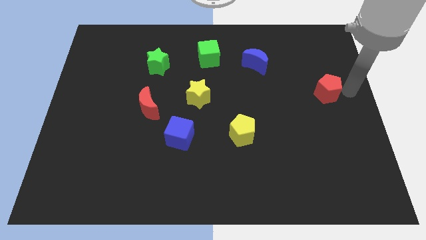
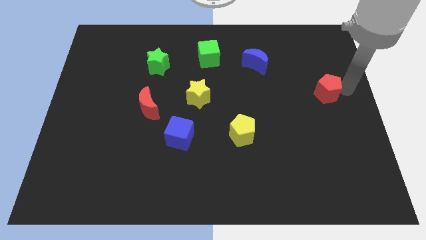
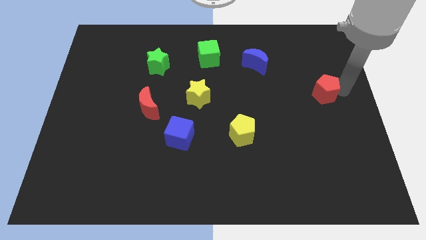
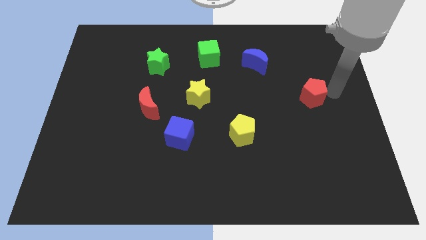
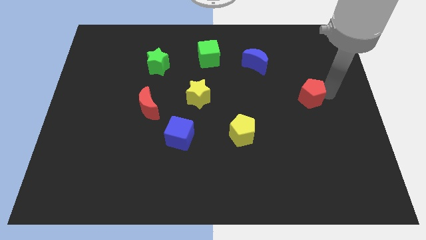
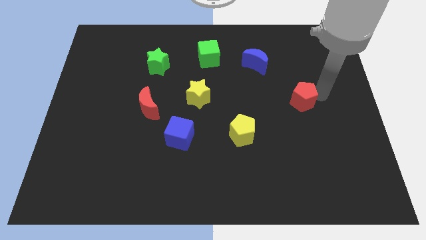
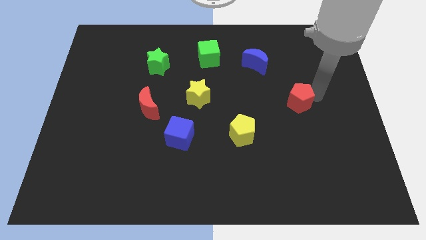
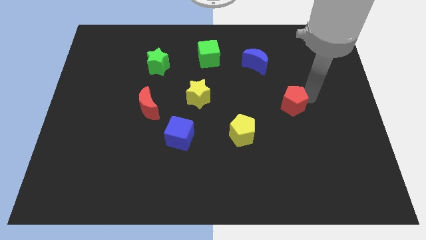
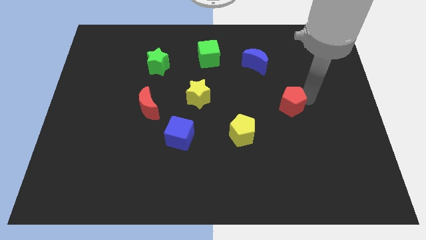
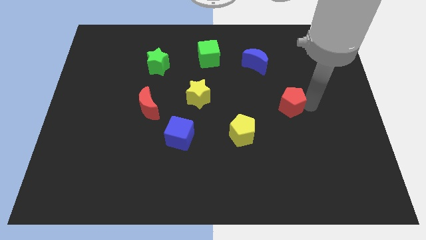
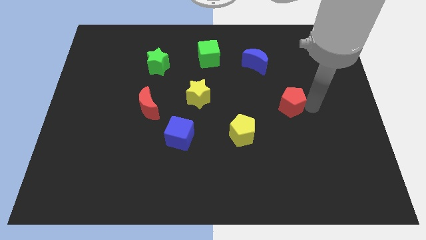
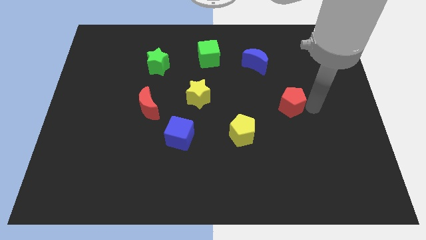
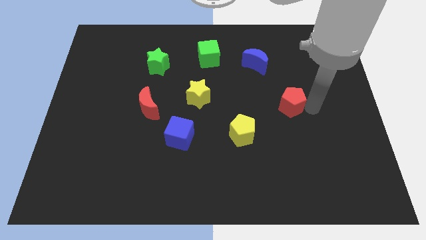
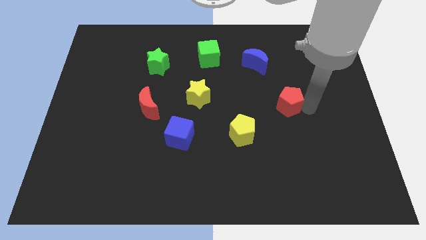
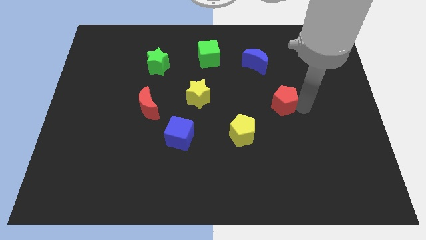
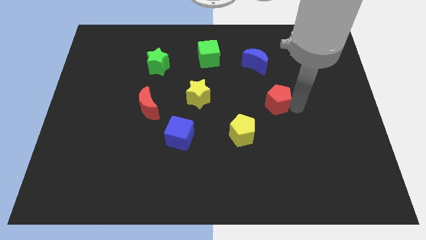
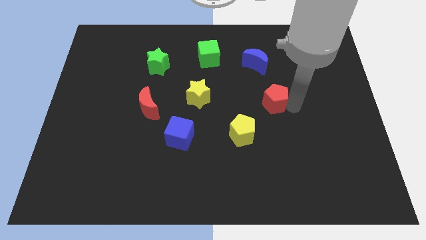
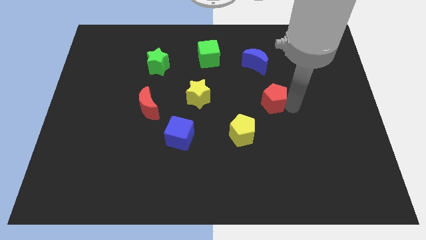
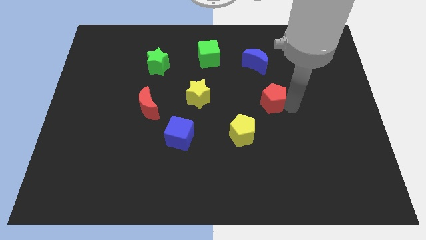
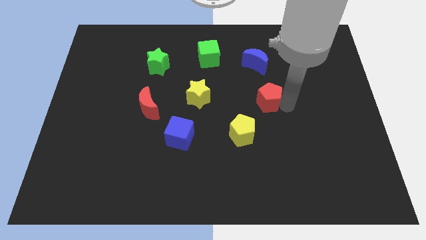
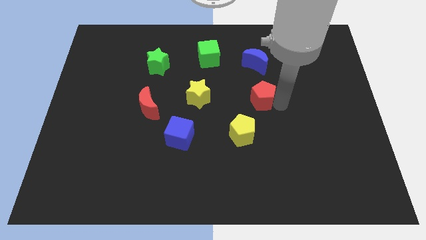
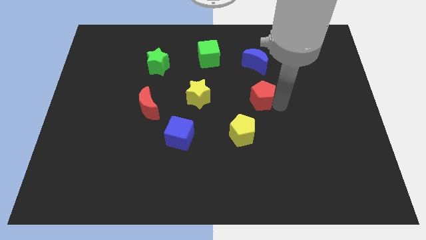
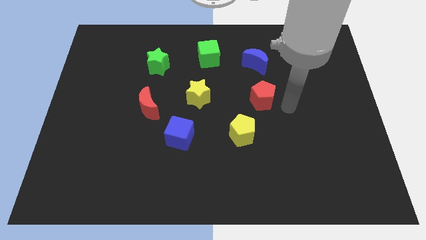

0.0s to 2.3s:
place the red pentagon diagonally above the yellow pentagon

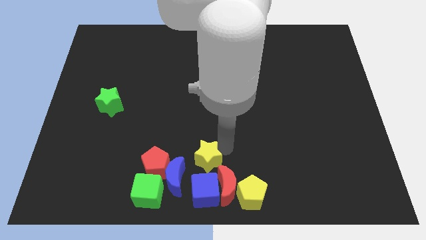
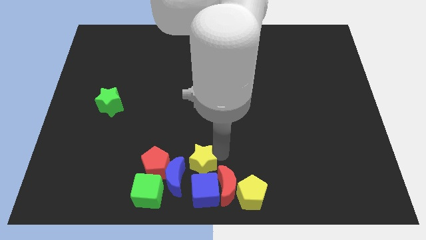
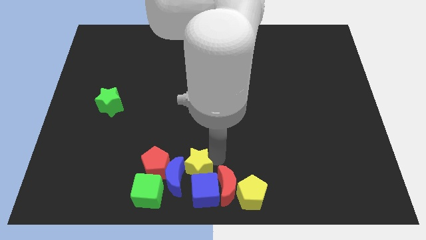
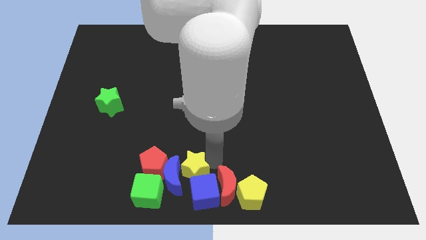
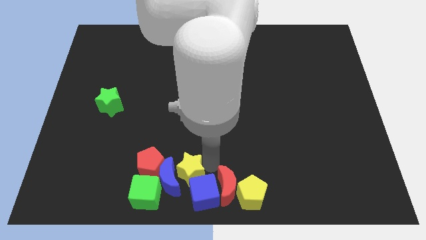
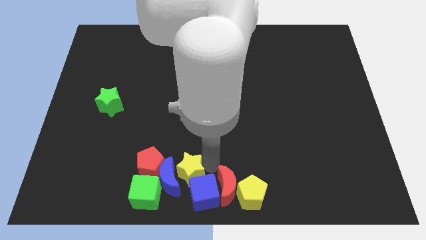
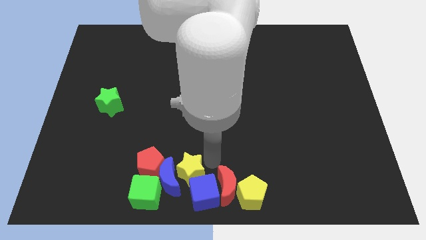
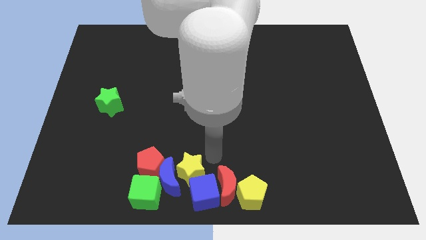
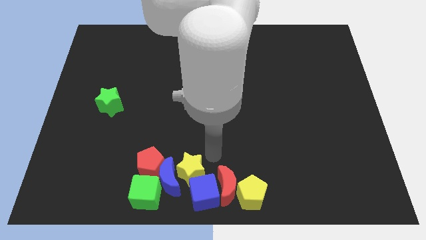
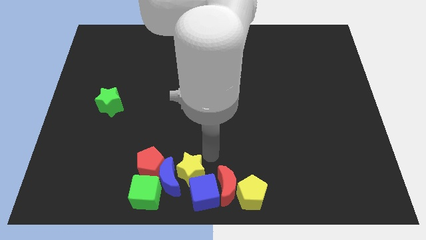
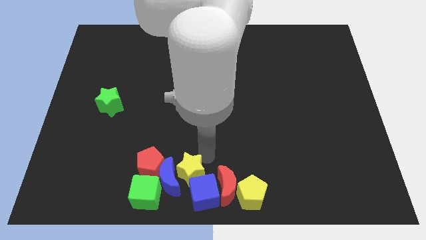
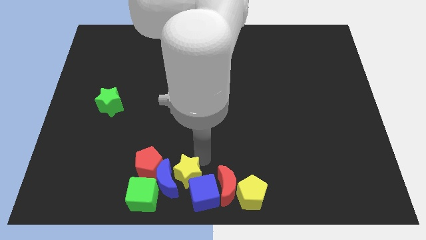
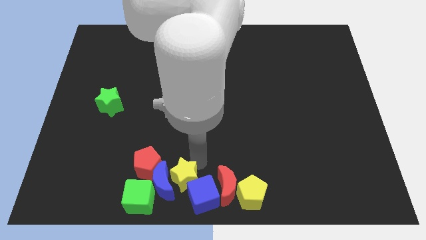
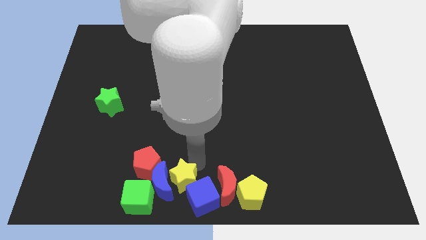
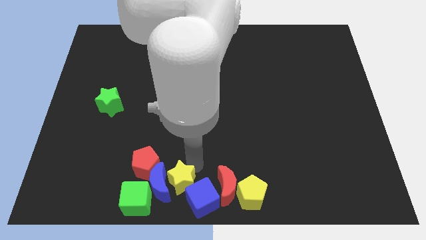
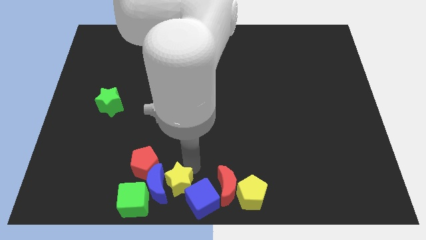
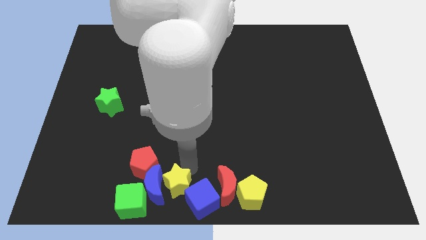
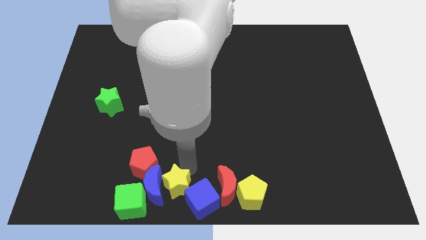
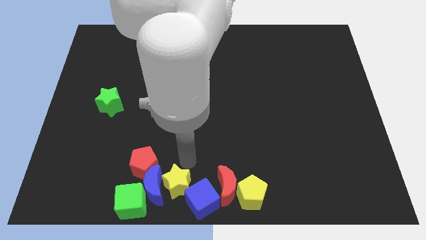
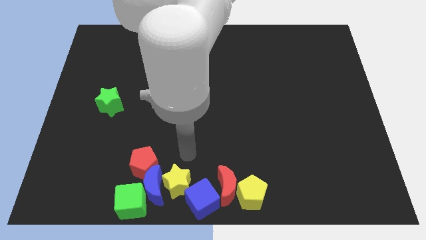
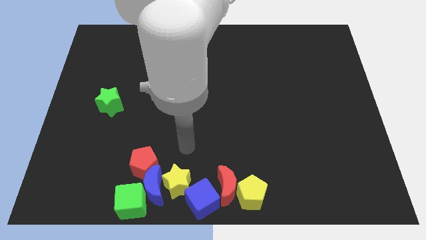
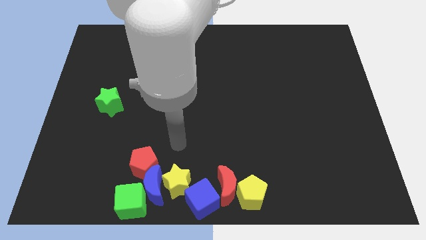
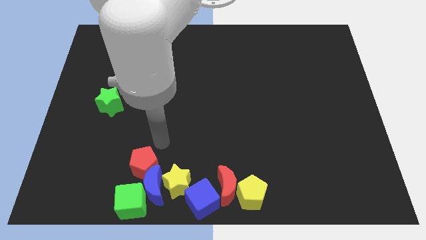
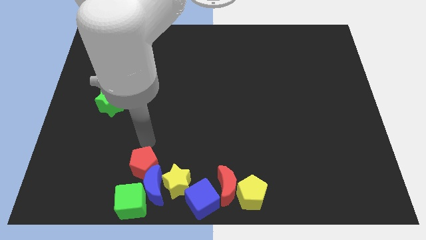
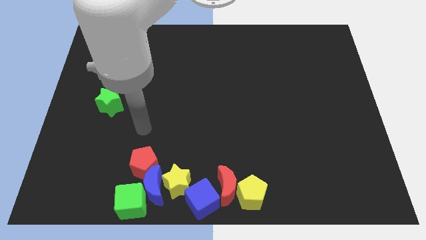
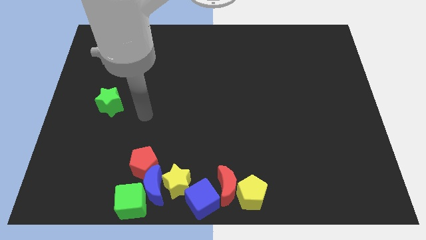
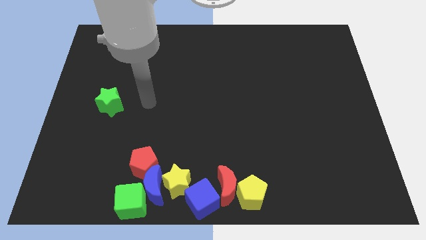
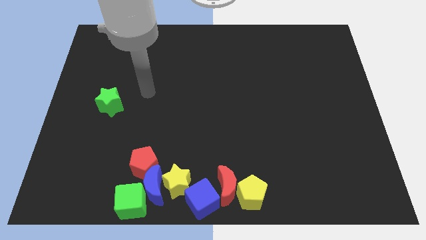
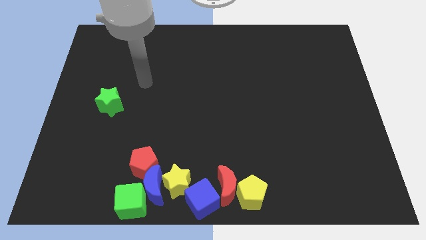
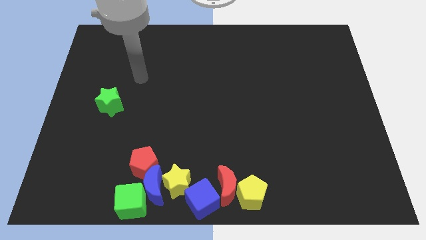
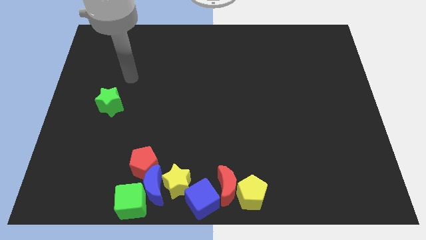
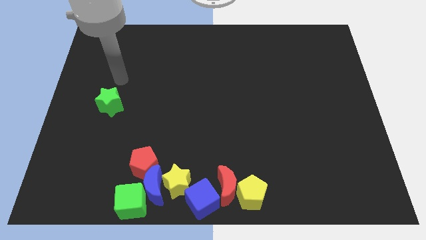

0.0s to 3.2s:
push the yellow star in between the blue blocks

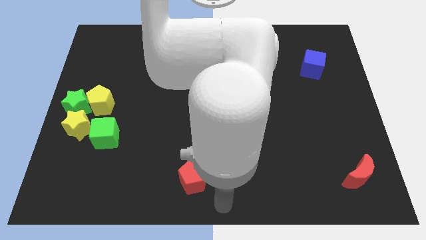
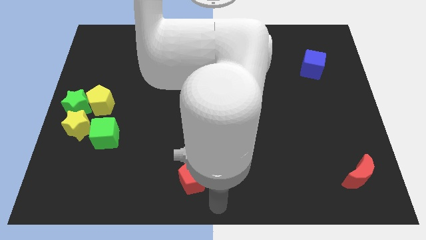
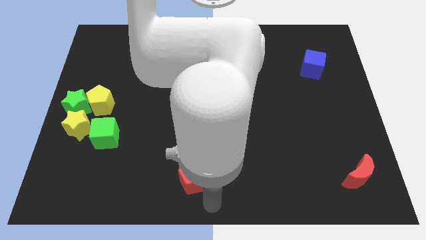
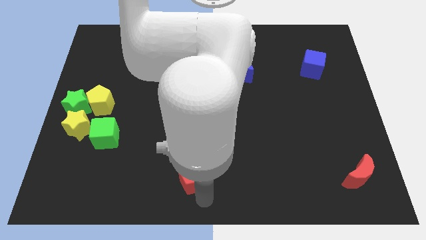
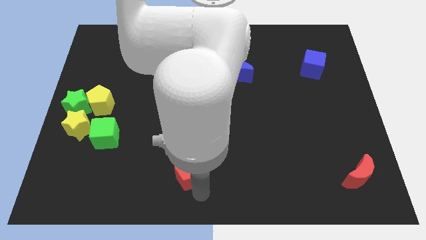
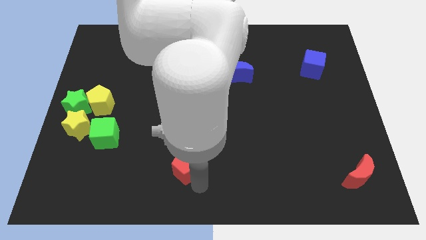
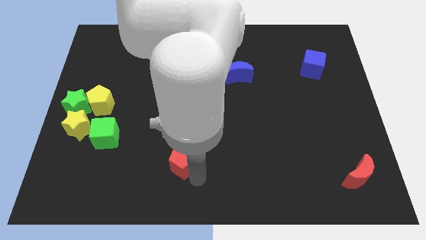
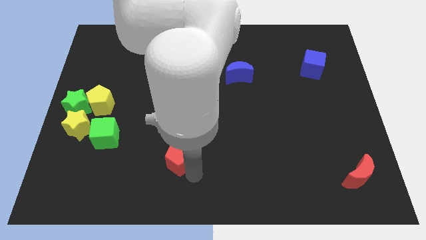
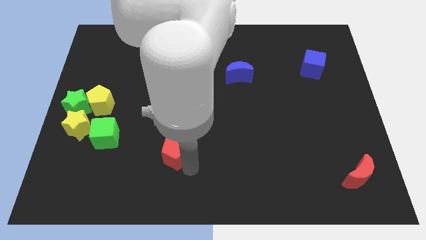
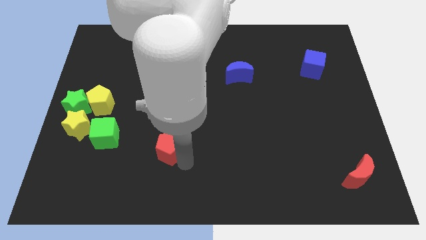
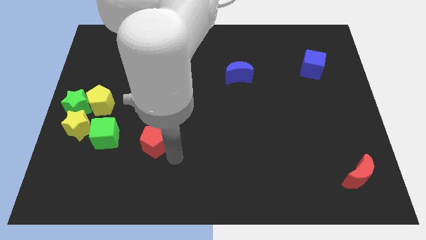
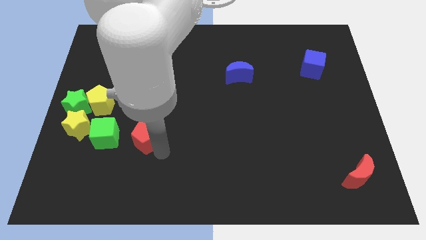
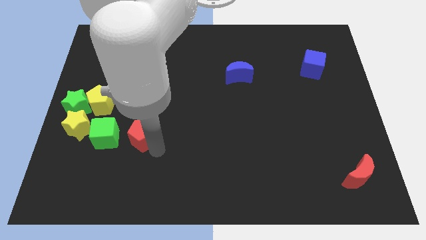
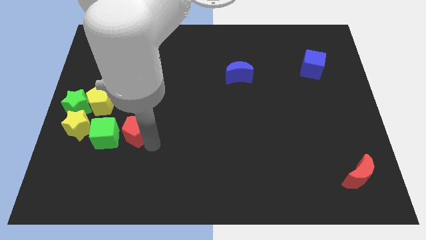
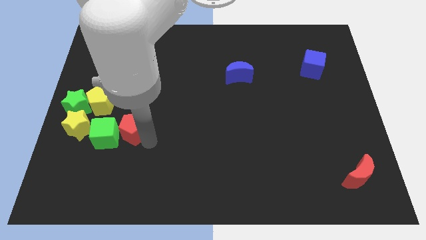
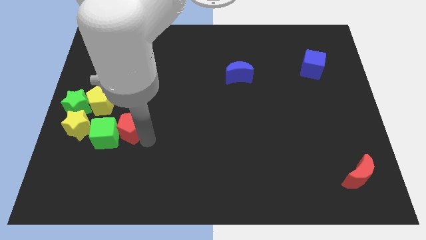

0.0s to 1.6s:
place red pentagon to the right of green cube

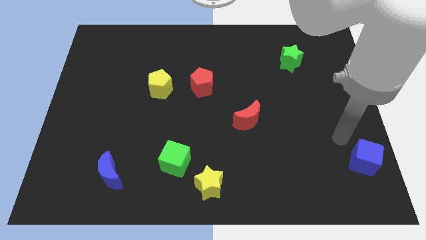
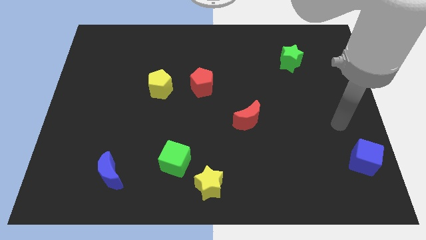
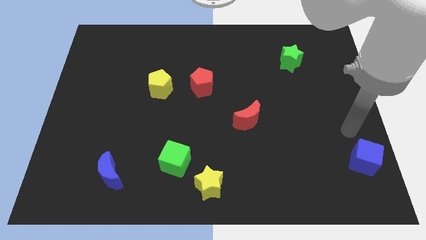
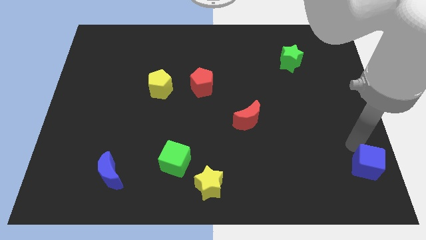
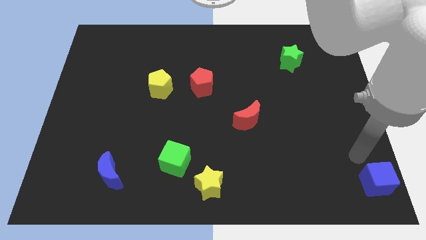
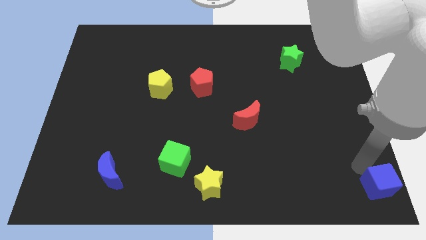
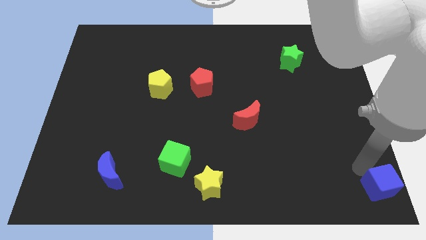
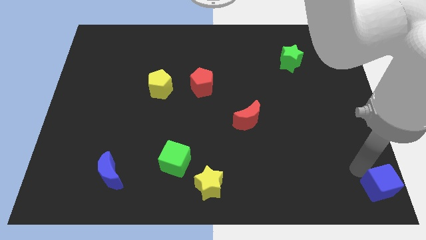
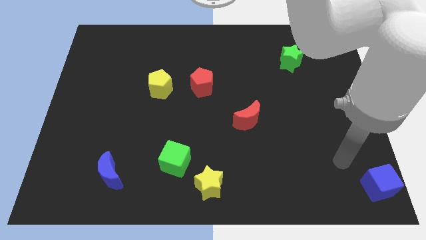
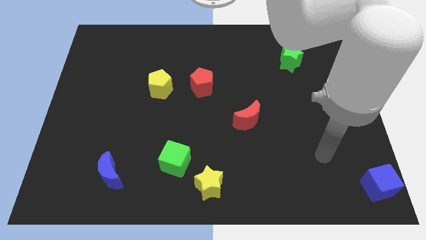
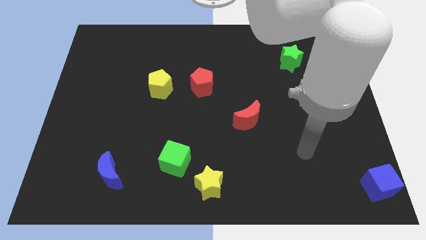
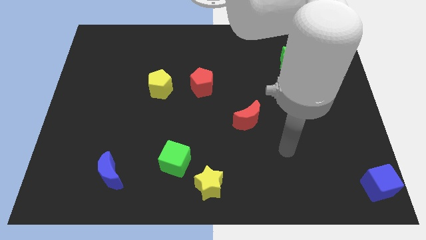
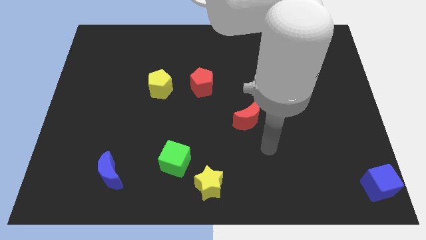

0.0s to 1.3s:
push the blue cube towards the bottom right corner

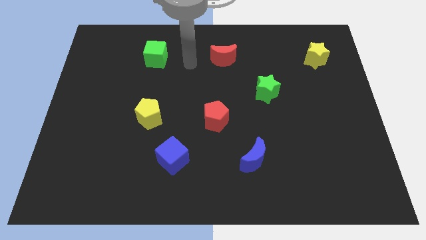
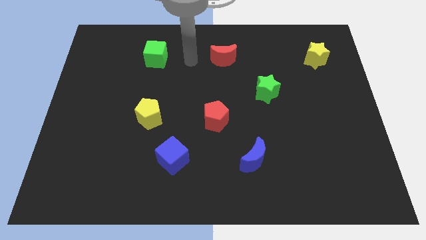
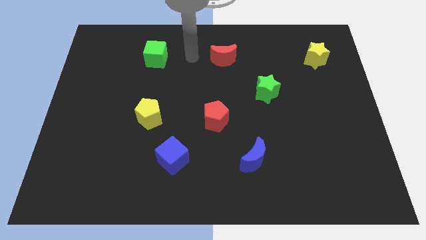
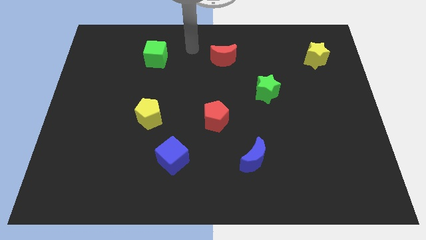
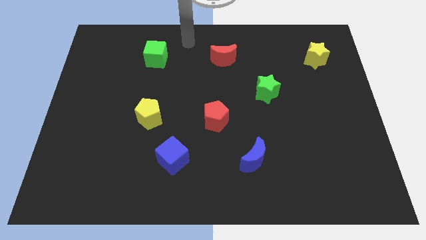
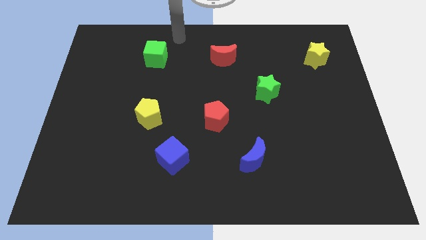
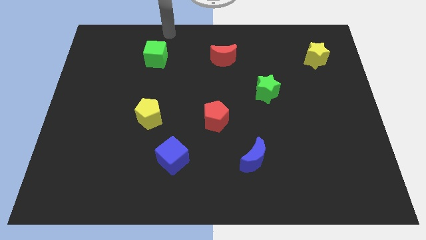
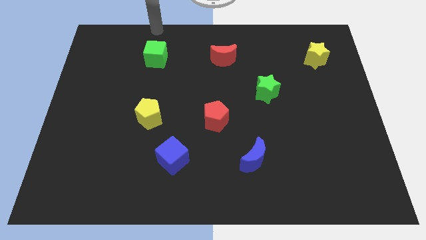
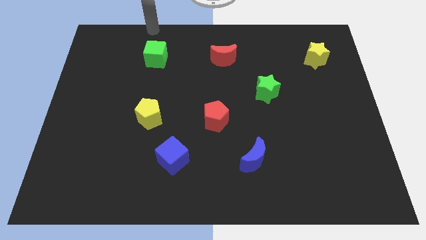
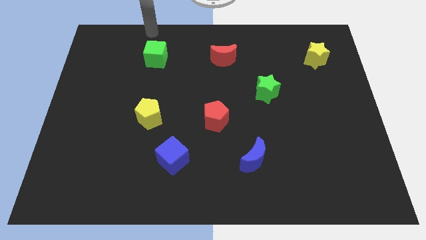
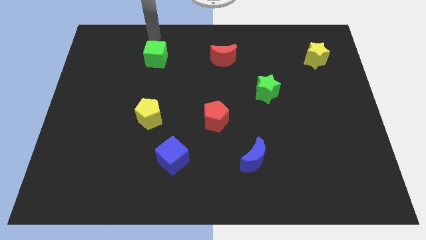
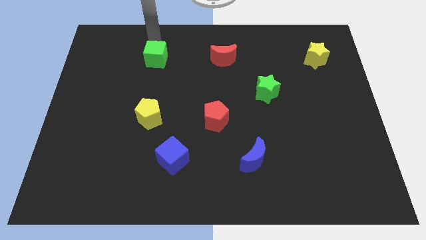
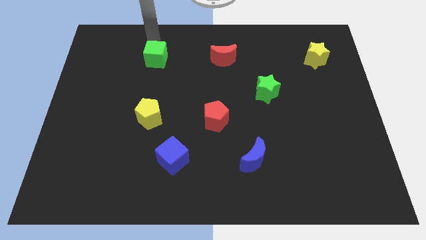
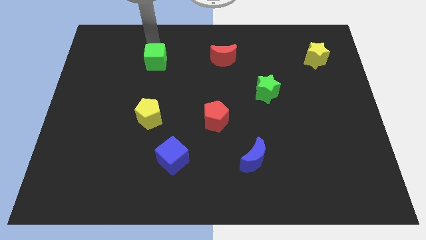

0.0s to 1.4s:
touch the top of green cube
